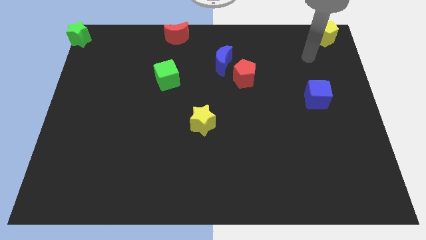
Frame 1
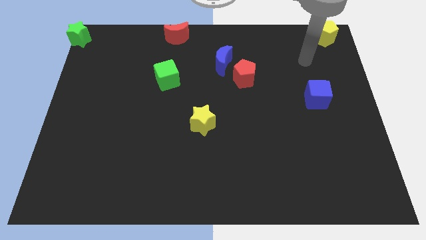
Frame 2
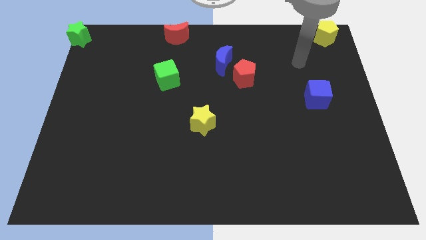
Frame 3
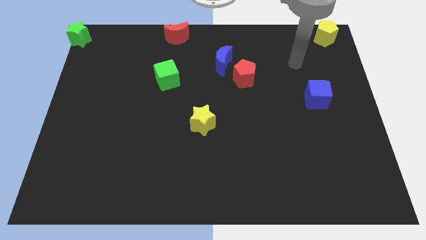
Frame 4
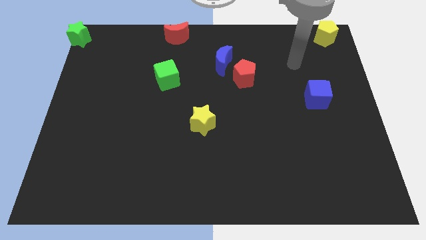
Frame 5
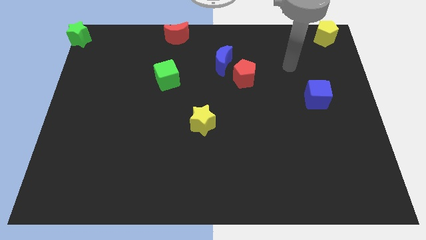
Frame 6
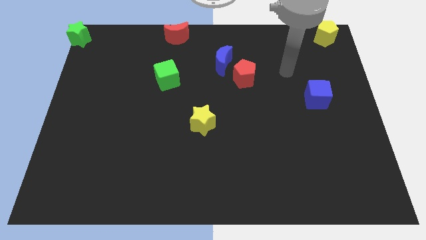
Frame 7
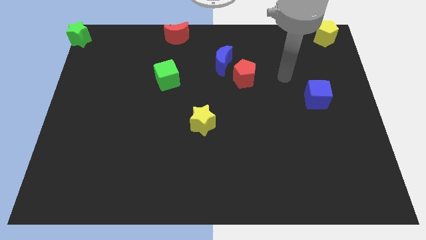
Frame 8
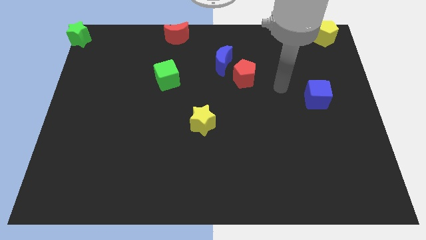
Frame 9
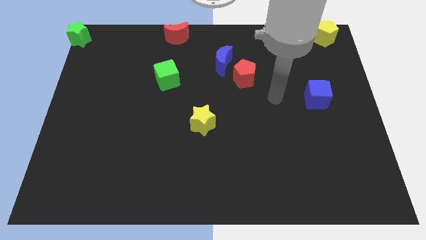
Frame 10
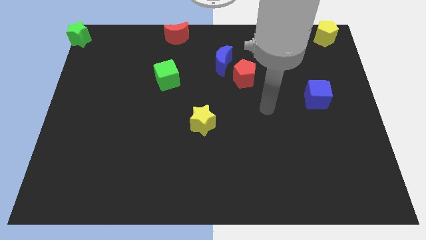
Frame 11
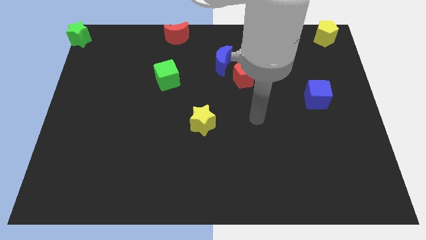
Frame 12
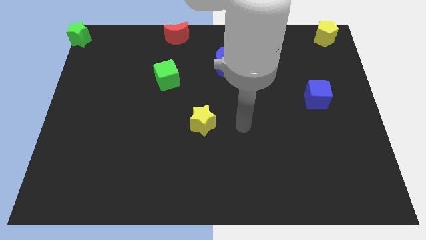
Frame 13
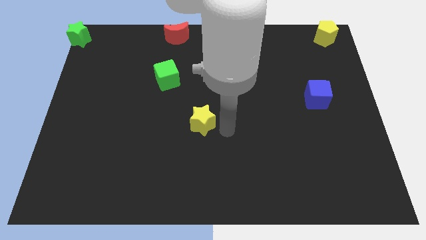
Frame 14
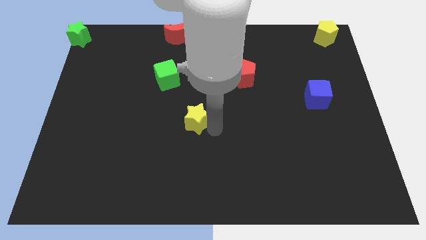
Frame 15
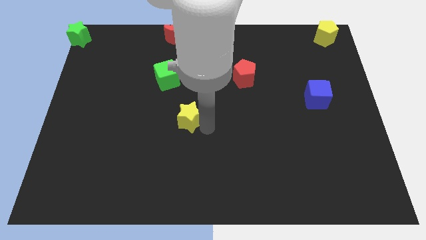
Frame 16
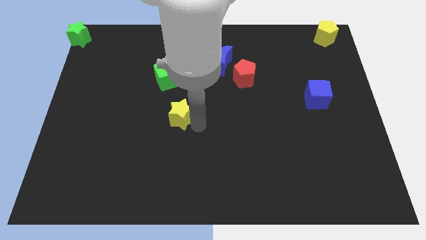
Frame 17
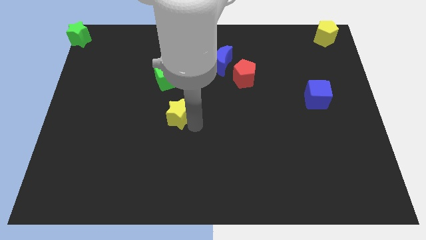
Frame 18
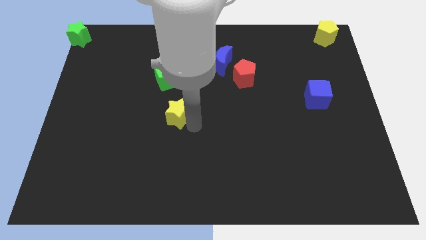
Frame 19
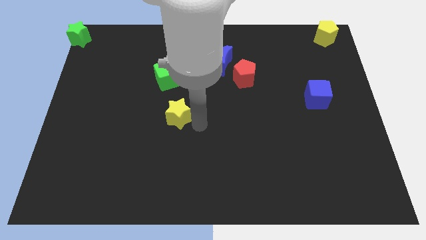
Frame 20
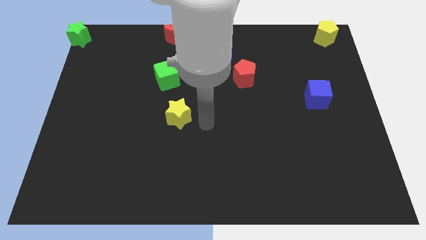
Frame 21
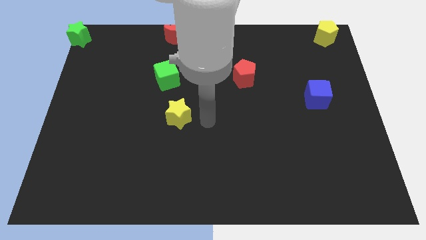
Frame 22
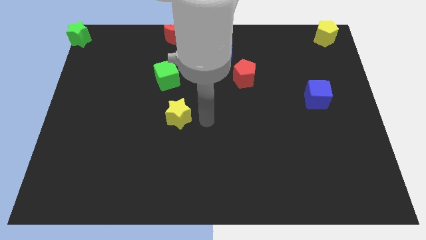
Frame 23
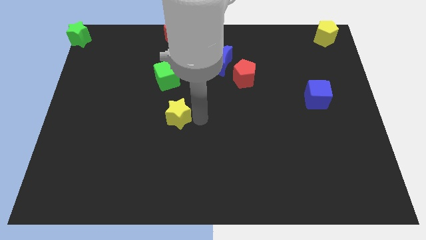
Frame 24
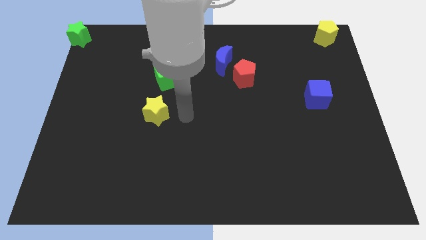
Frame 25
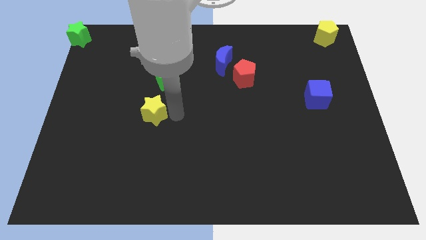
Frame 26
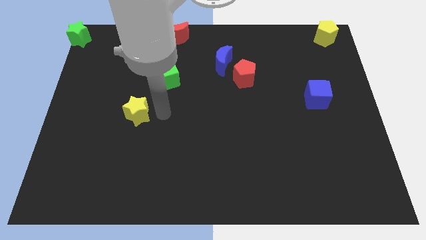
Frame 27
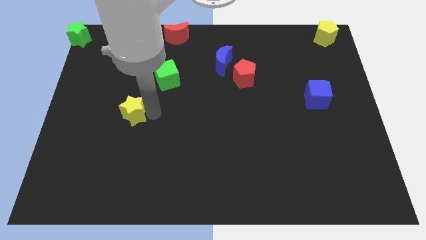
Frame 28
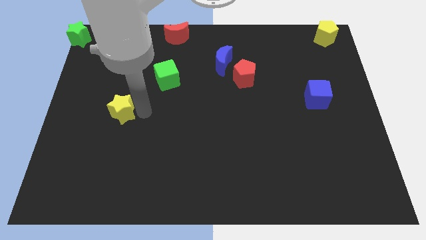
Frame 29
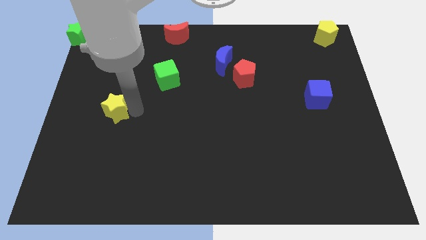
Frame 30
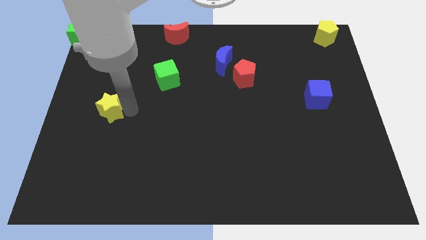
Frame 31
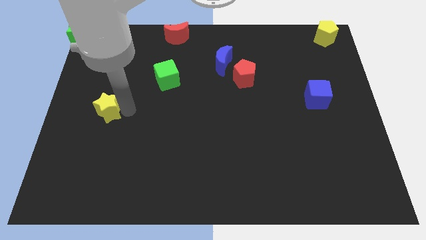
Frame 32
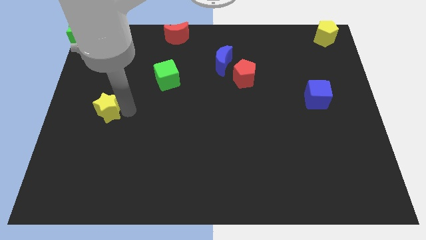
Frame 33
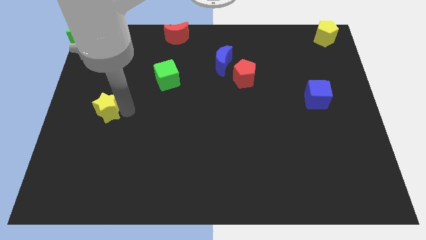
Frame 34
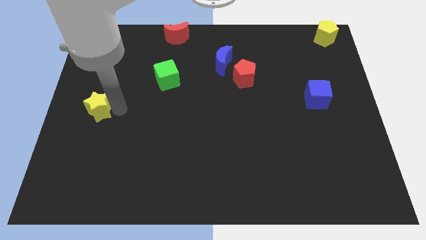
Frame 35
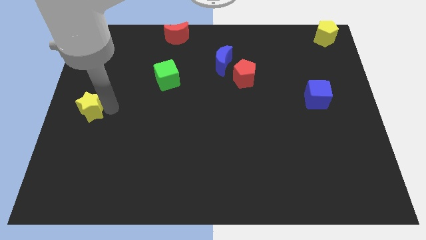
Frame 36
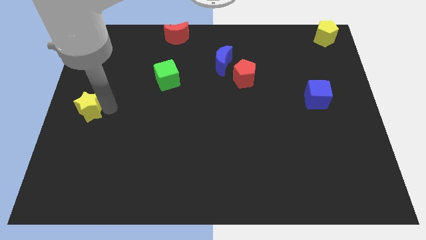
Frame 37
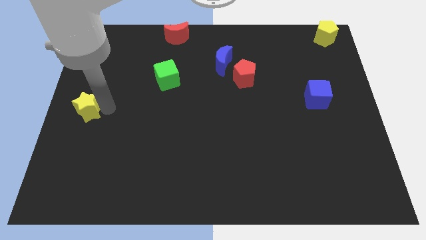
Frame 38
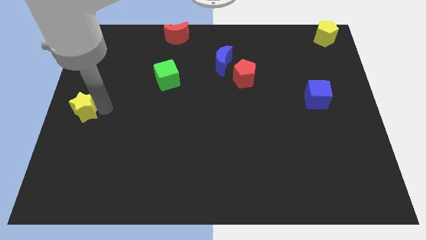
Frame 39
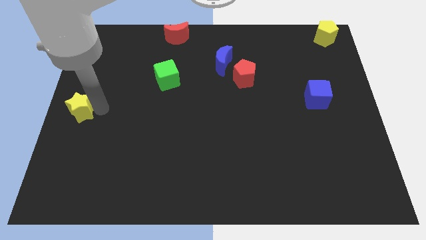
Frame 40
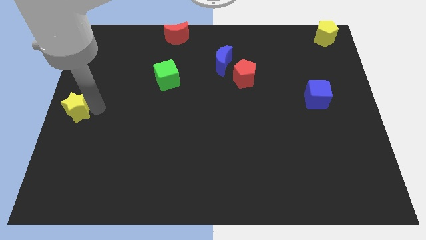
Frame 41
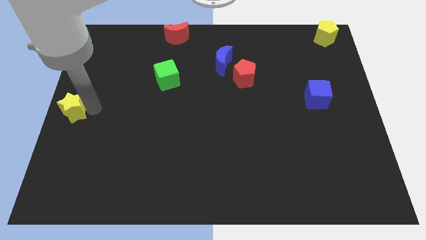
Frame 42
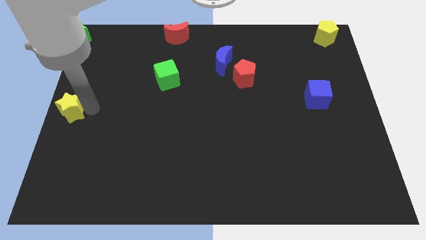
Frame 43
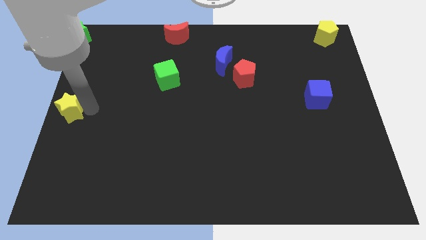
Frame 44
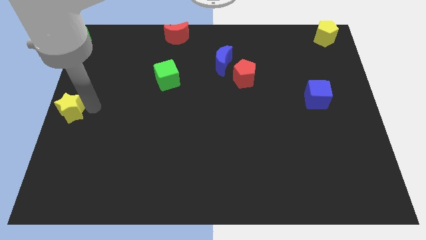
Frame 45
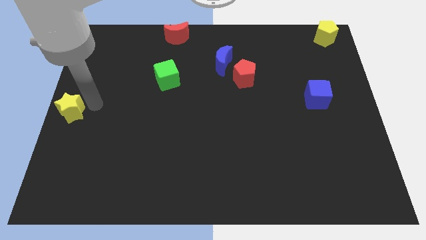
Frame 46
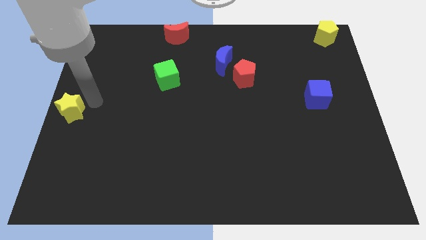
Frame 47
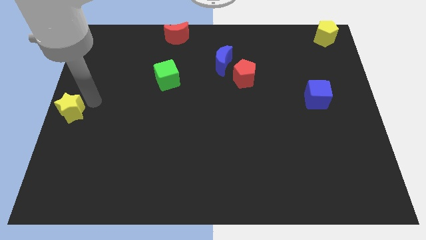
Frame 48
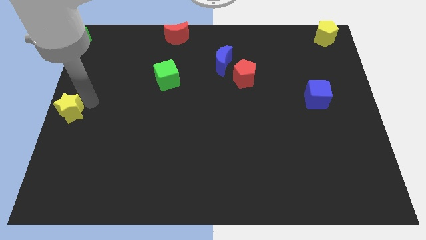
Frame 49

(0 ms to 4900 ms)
place yellow star to the left center of the board

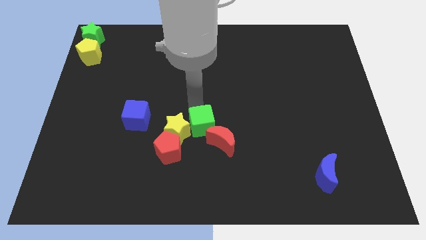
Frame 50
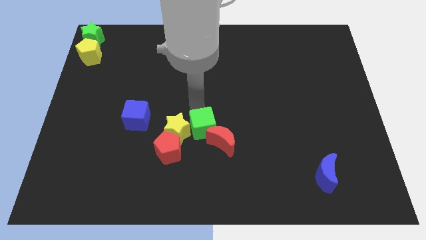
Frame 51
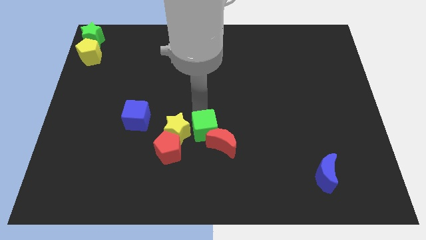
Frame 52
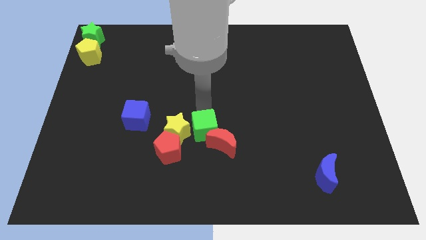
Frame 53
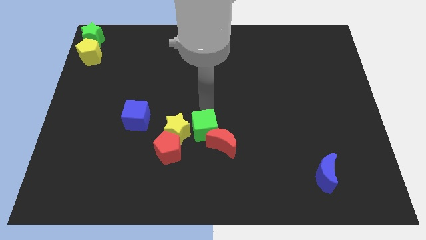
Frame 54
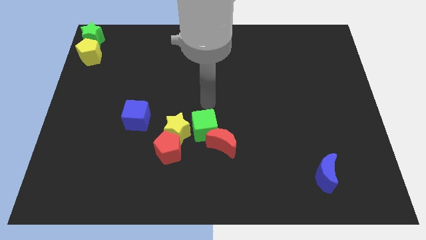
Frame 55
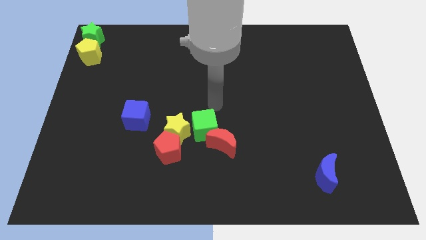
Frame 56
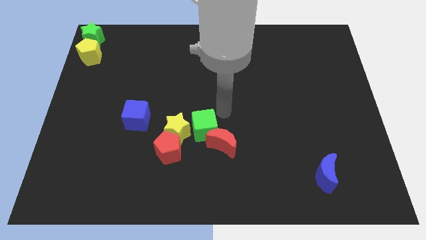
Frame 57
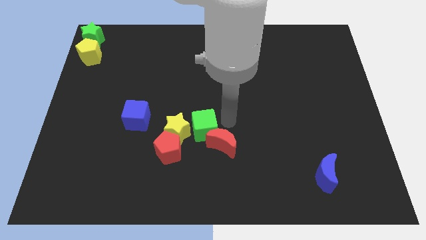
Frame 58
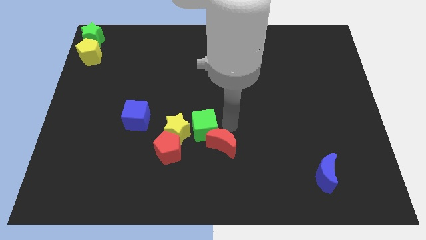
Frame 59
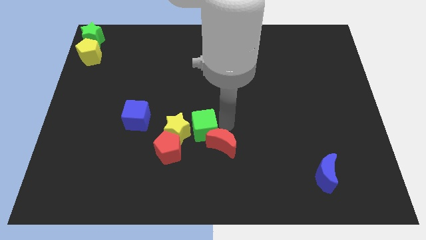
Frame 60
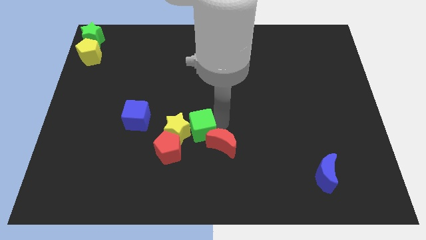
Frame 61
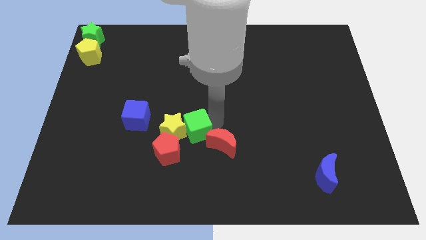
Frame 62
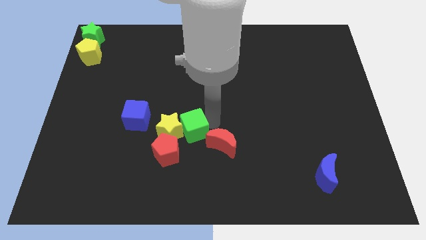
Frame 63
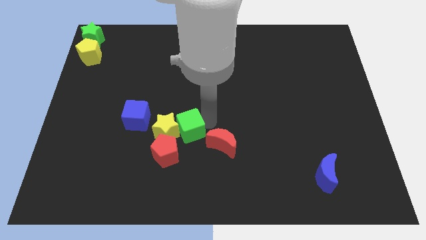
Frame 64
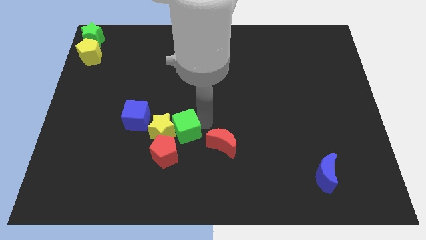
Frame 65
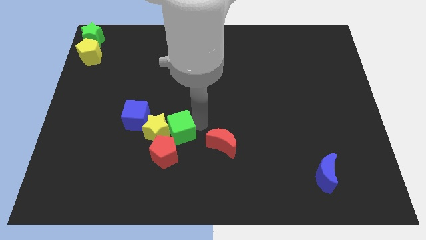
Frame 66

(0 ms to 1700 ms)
move green cube into yellow star

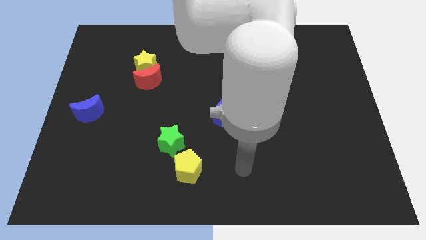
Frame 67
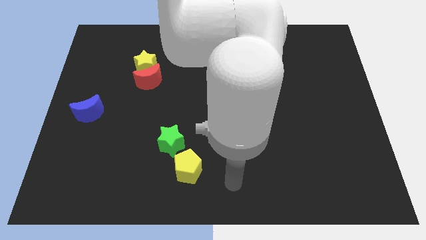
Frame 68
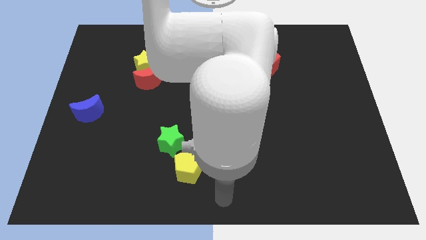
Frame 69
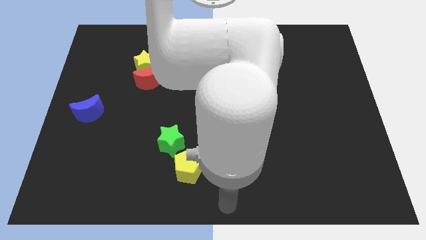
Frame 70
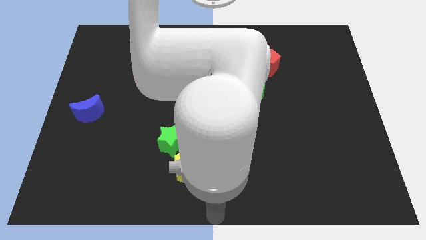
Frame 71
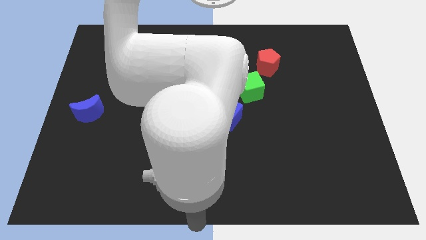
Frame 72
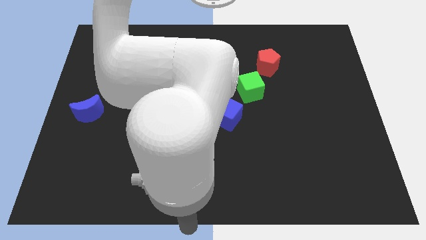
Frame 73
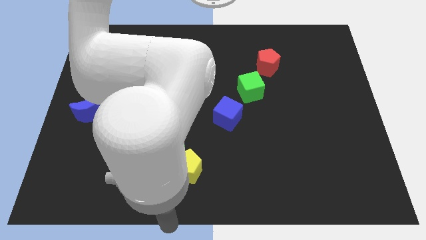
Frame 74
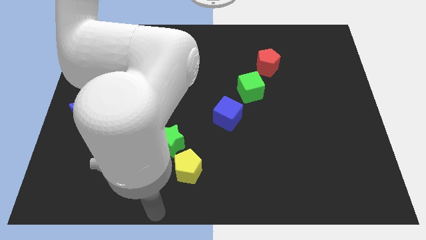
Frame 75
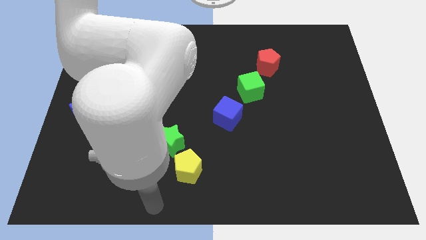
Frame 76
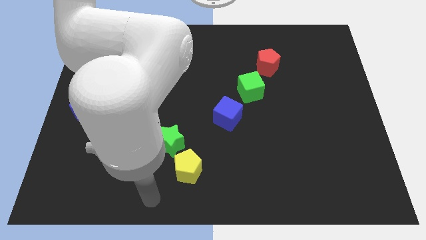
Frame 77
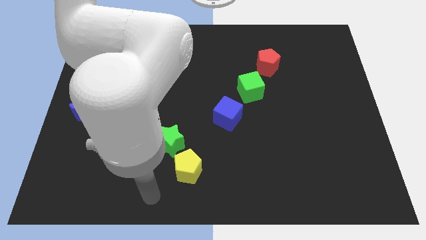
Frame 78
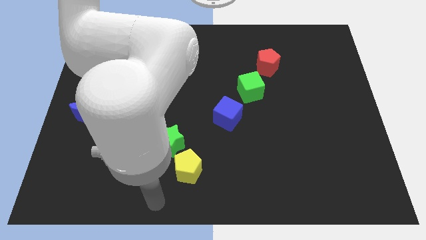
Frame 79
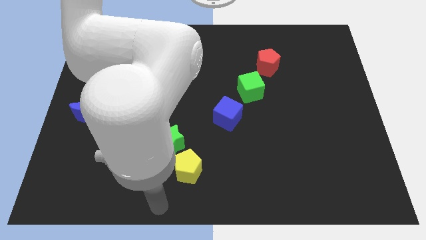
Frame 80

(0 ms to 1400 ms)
move your arm to the left bottom of the board

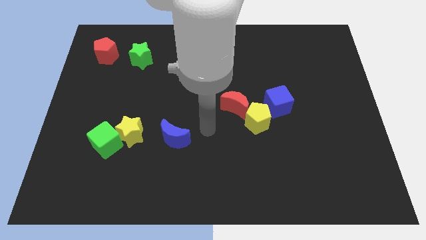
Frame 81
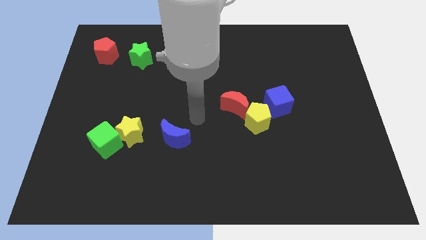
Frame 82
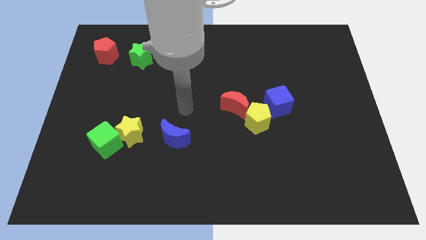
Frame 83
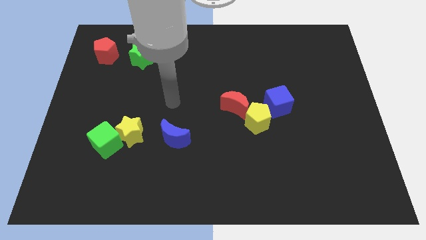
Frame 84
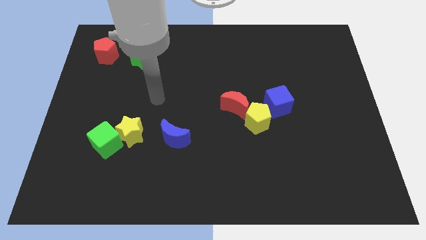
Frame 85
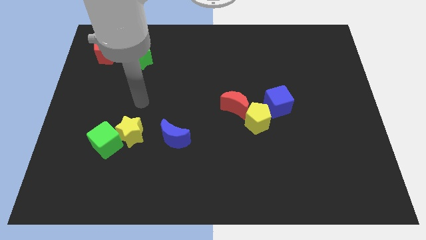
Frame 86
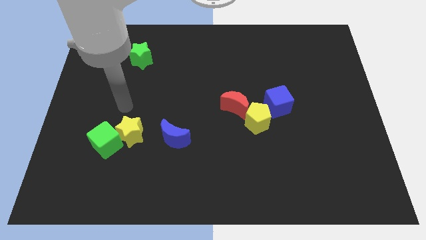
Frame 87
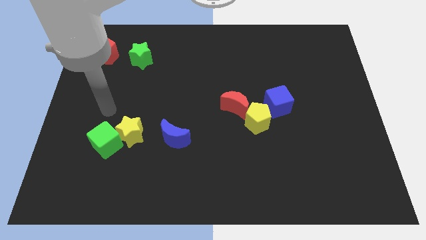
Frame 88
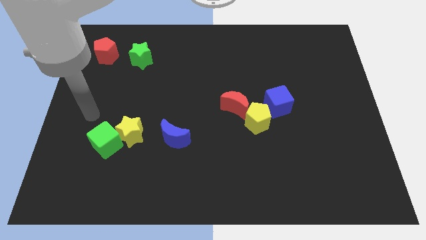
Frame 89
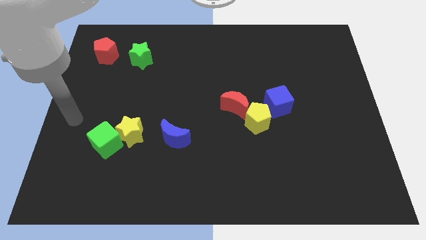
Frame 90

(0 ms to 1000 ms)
move arm near green cube
